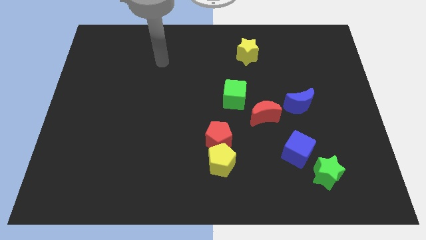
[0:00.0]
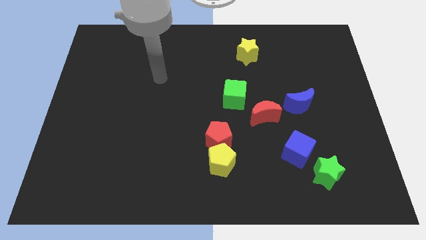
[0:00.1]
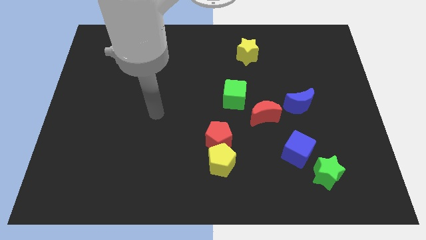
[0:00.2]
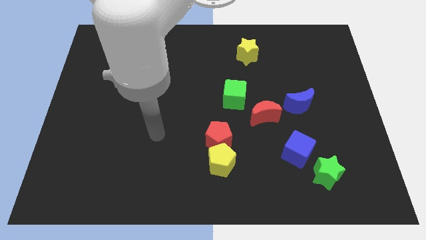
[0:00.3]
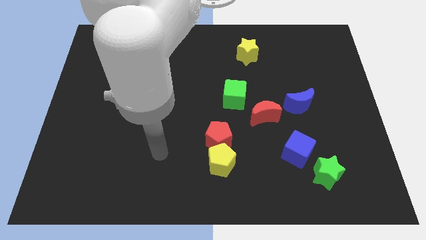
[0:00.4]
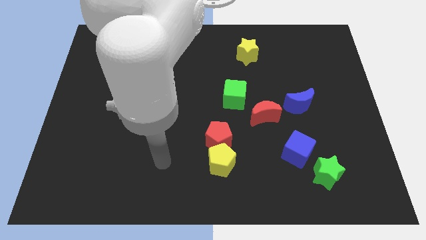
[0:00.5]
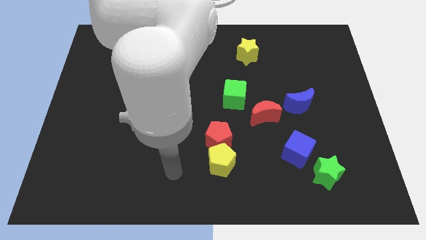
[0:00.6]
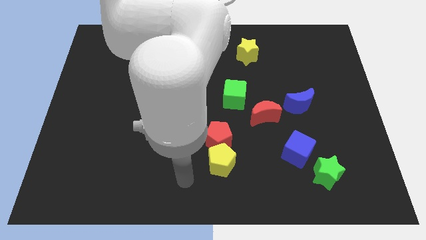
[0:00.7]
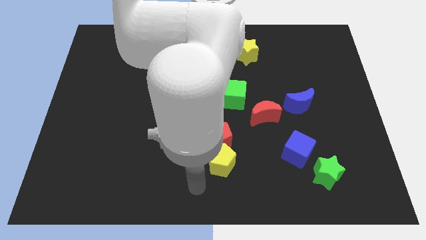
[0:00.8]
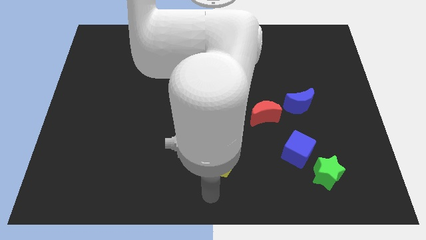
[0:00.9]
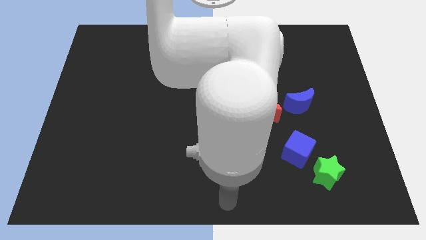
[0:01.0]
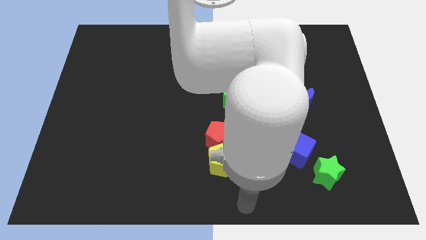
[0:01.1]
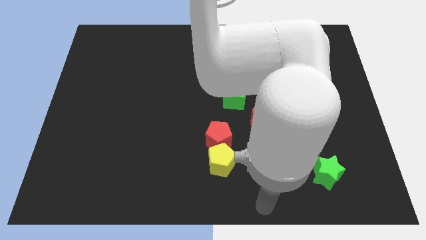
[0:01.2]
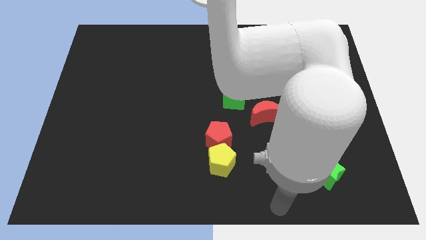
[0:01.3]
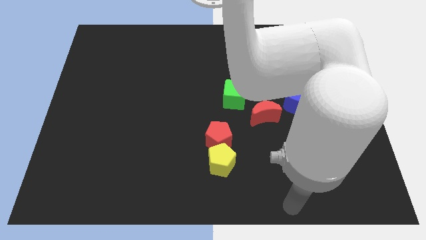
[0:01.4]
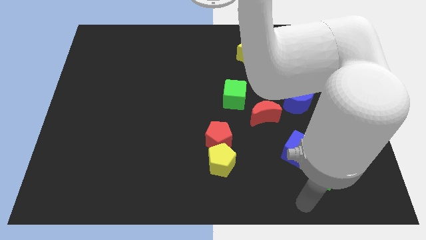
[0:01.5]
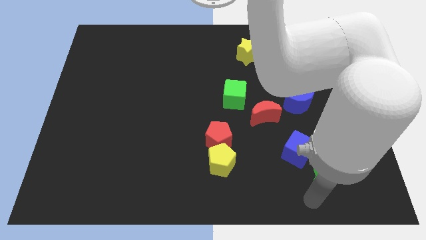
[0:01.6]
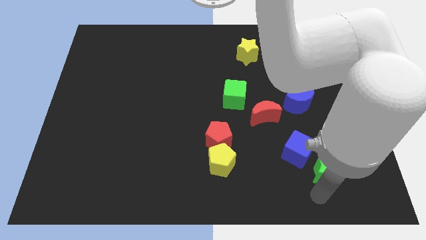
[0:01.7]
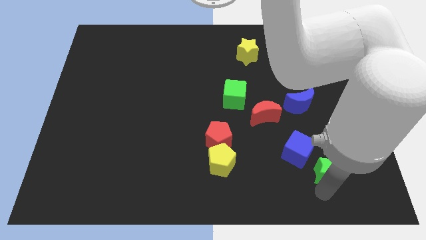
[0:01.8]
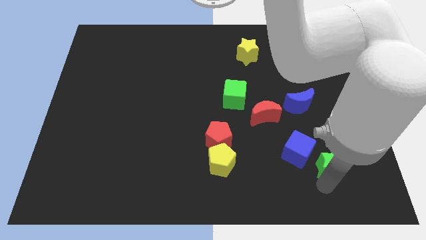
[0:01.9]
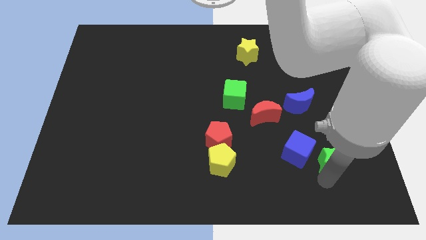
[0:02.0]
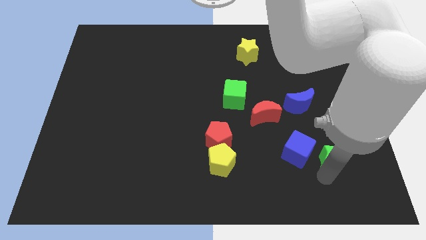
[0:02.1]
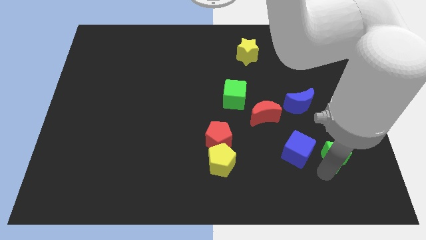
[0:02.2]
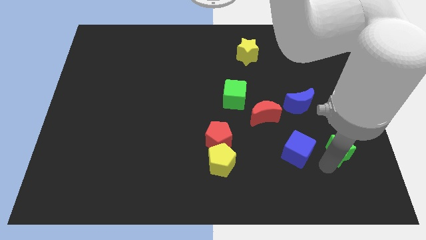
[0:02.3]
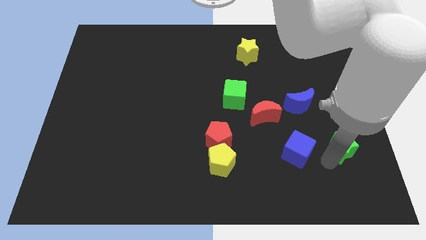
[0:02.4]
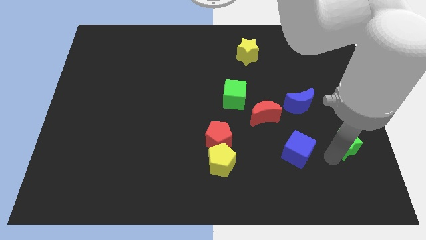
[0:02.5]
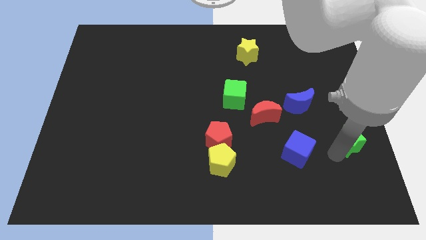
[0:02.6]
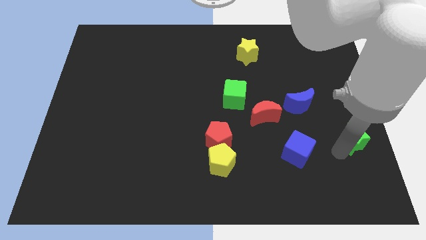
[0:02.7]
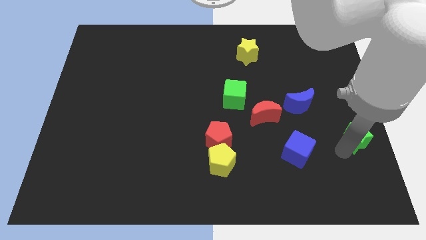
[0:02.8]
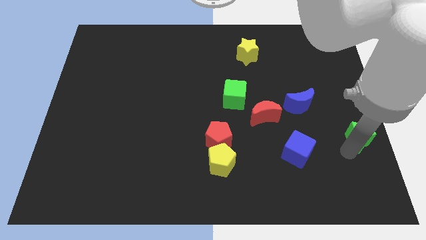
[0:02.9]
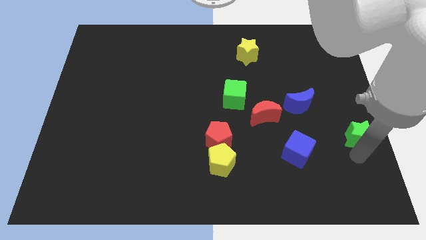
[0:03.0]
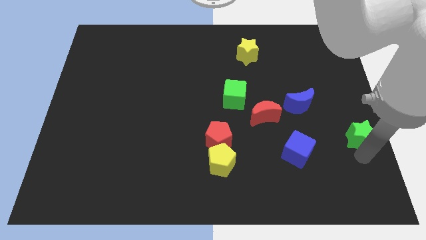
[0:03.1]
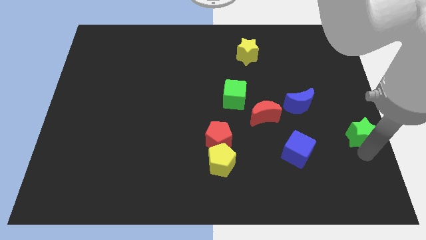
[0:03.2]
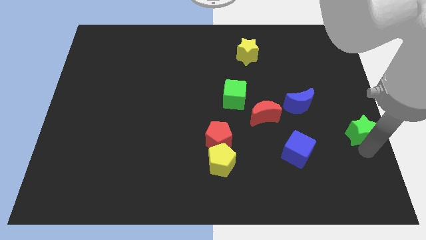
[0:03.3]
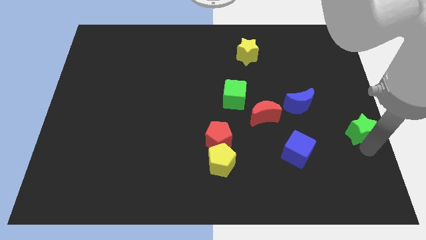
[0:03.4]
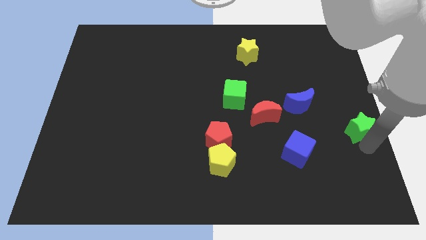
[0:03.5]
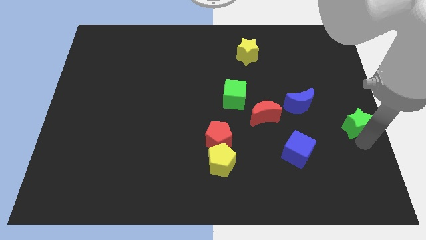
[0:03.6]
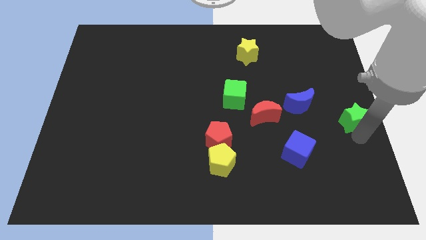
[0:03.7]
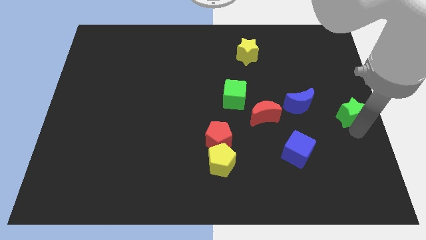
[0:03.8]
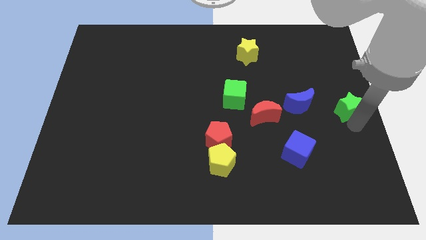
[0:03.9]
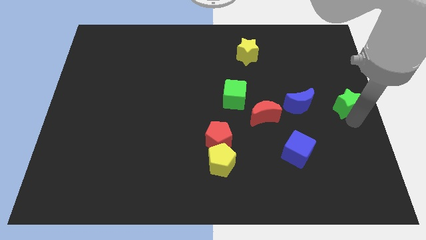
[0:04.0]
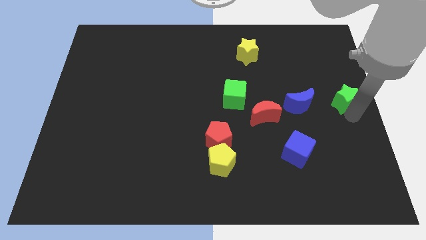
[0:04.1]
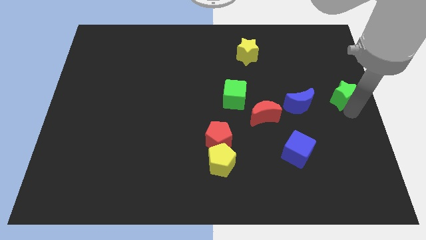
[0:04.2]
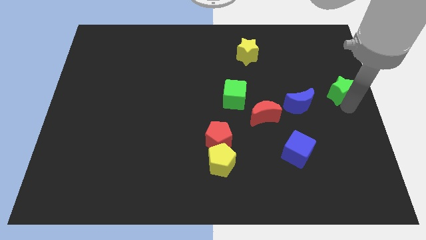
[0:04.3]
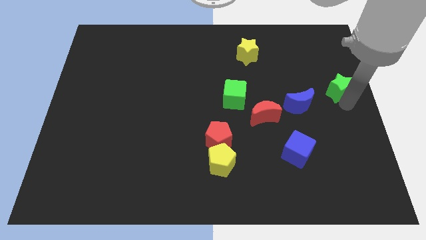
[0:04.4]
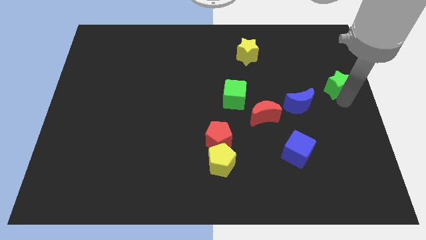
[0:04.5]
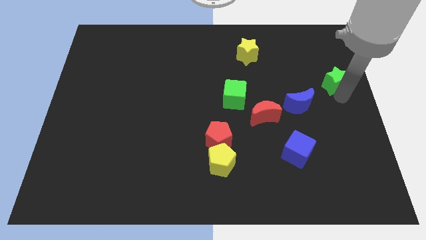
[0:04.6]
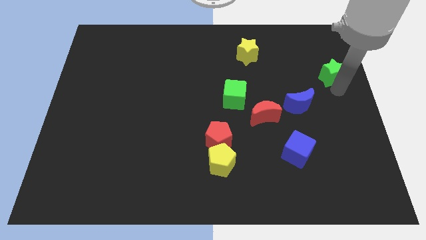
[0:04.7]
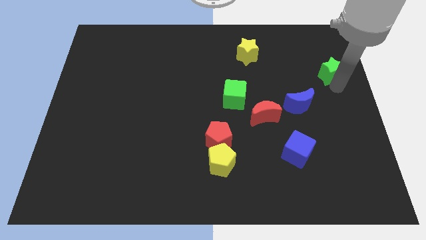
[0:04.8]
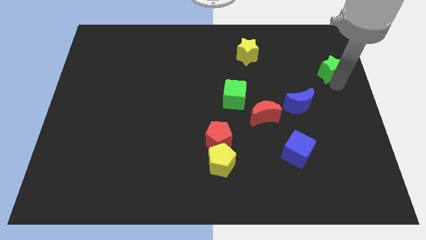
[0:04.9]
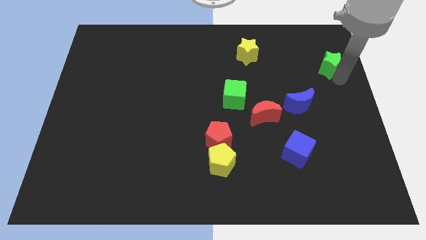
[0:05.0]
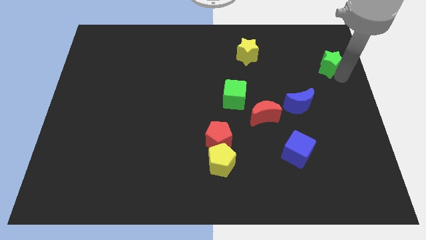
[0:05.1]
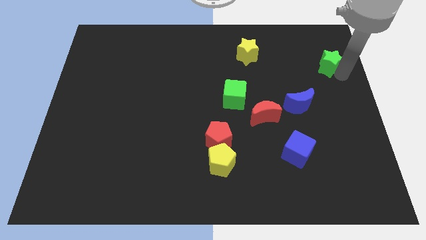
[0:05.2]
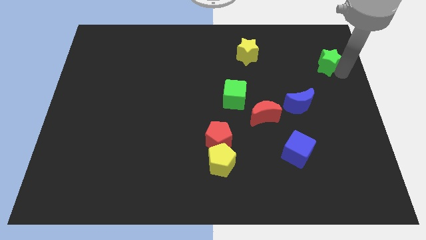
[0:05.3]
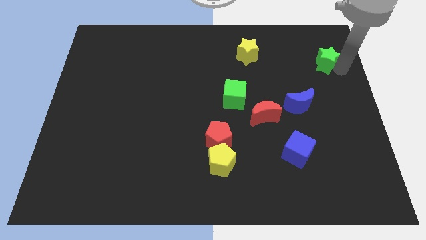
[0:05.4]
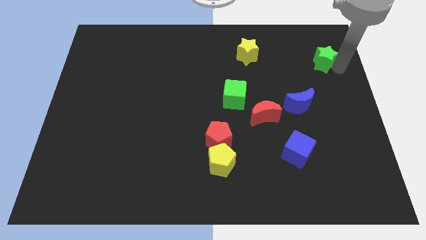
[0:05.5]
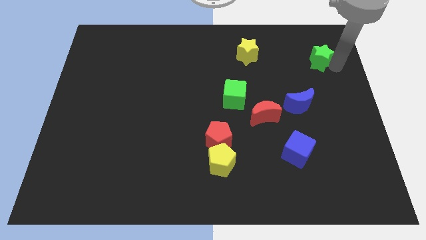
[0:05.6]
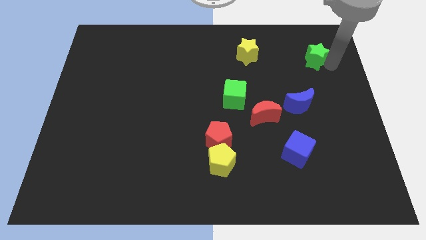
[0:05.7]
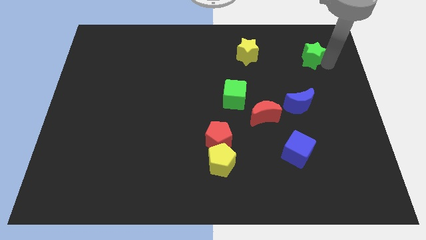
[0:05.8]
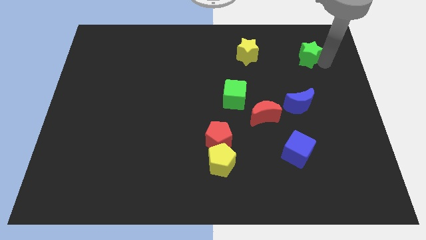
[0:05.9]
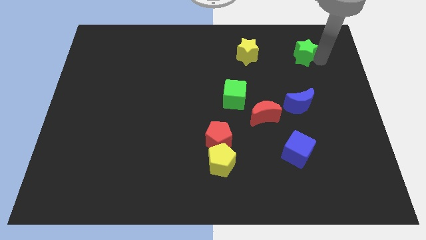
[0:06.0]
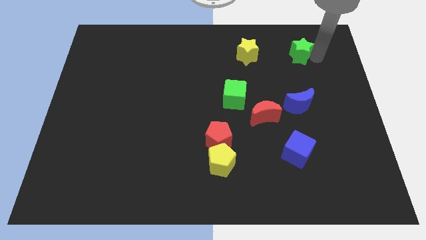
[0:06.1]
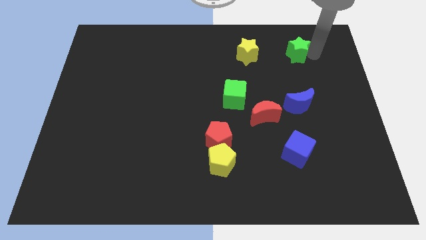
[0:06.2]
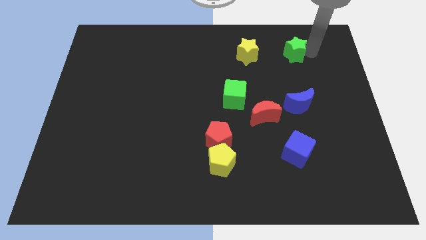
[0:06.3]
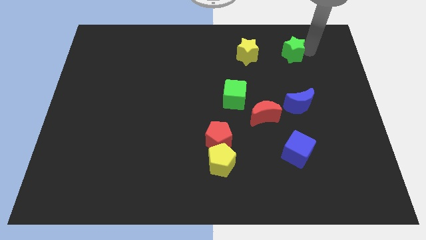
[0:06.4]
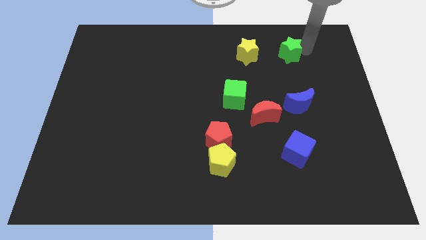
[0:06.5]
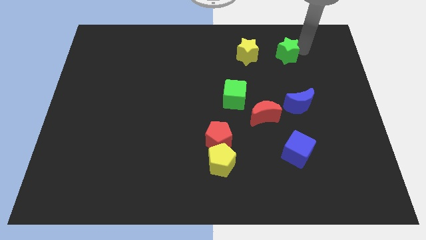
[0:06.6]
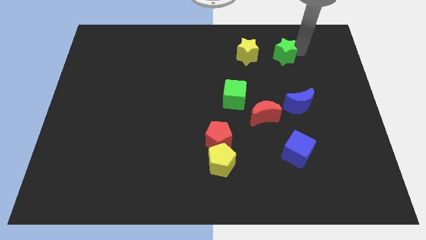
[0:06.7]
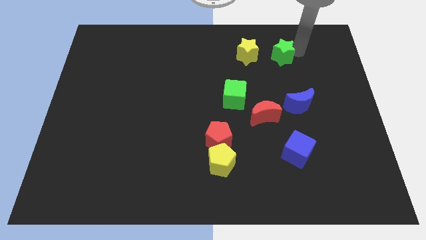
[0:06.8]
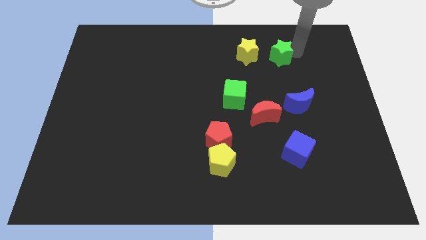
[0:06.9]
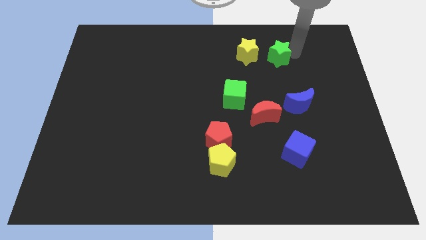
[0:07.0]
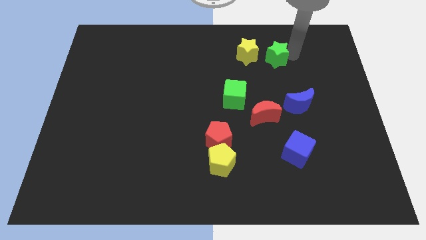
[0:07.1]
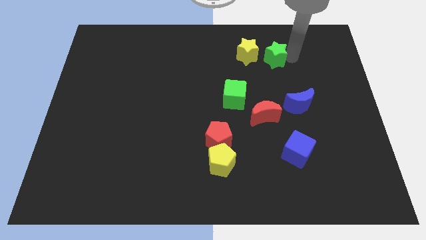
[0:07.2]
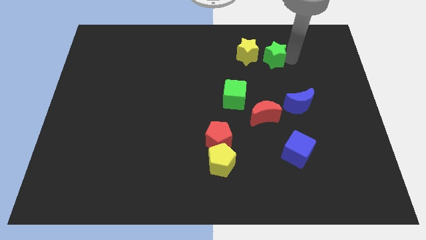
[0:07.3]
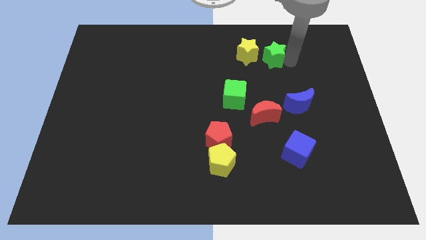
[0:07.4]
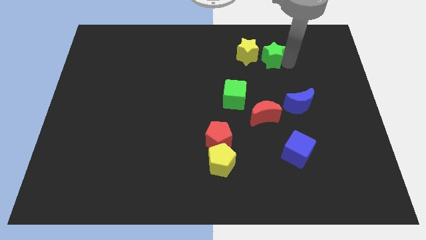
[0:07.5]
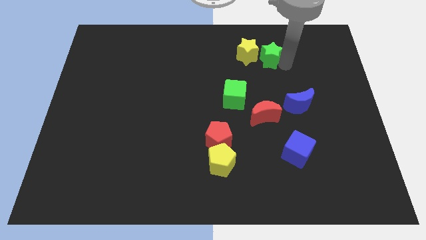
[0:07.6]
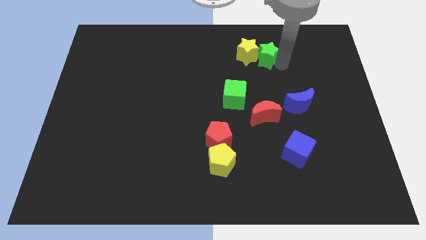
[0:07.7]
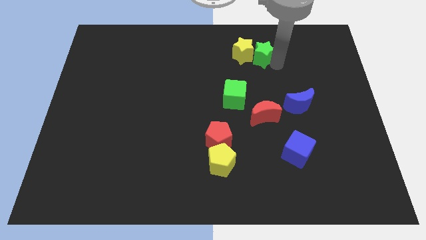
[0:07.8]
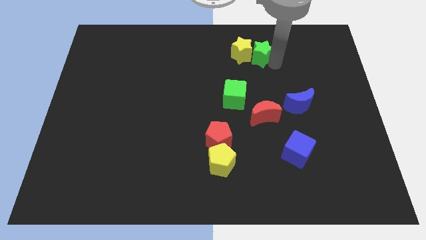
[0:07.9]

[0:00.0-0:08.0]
push the green star next to the yellow star
